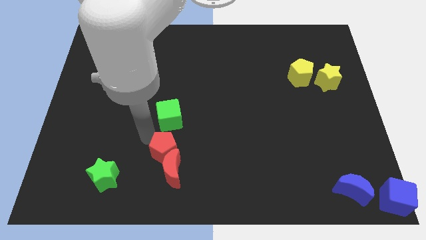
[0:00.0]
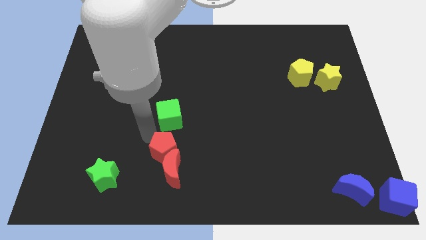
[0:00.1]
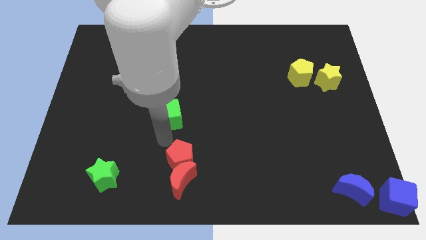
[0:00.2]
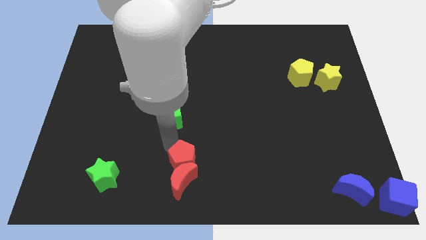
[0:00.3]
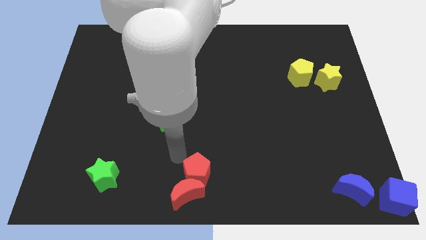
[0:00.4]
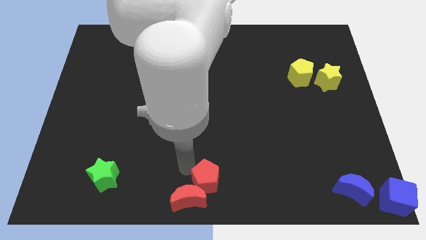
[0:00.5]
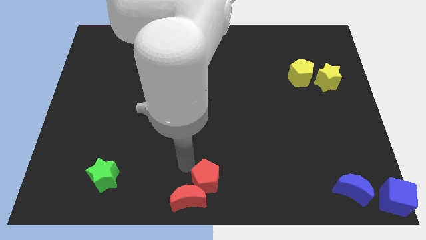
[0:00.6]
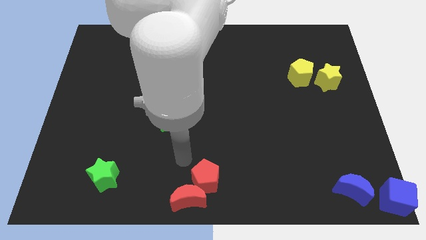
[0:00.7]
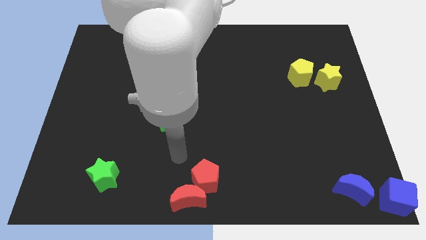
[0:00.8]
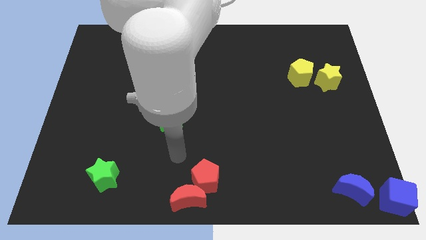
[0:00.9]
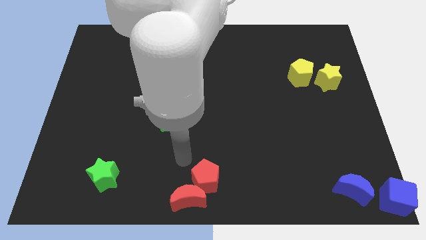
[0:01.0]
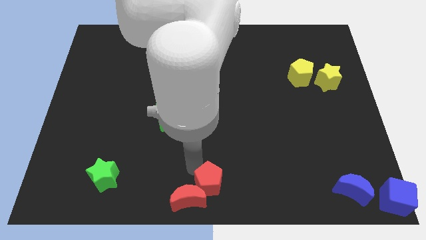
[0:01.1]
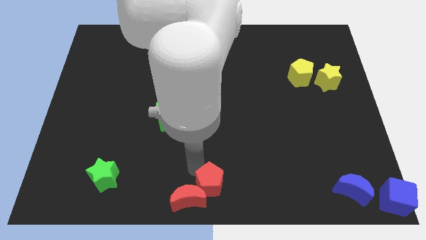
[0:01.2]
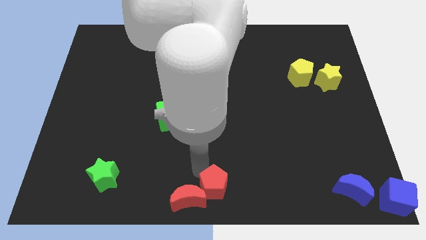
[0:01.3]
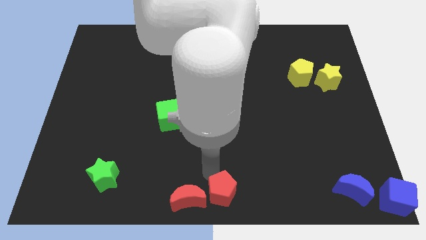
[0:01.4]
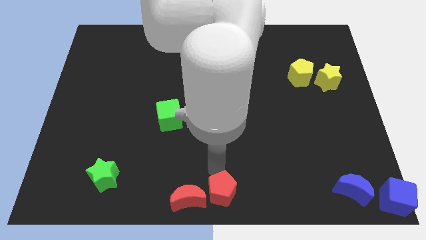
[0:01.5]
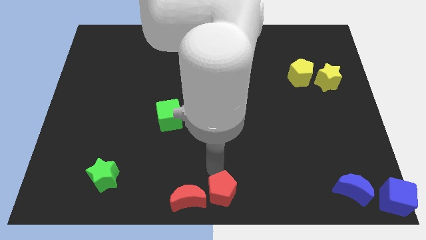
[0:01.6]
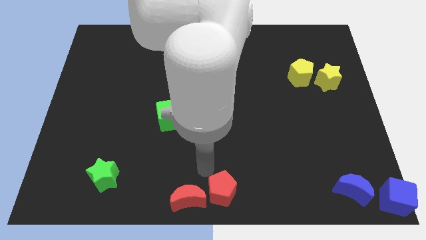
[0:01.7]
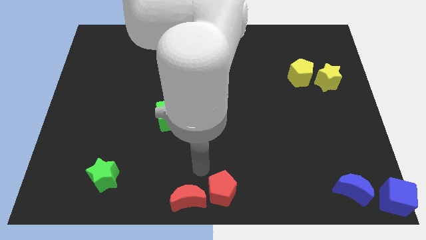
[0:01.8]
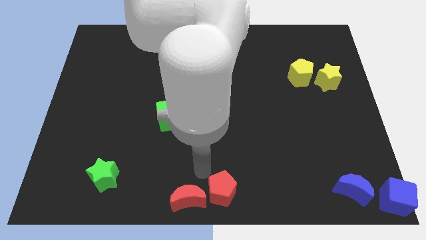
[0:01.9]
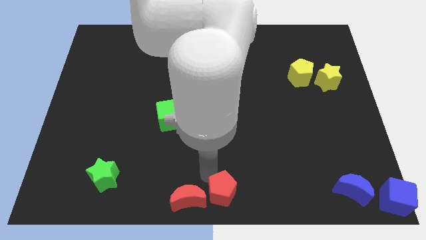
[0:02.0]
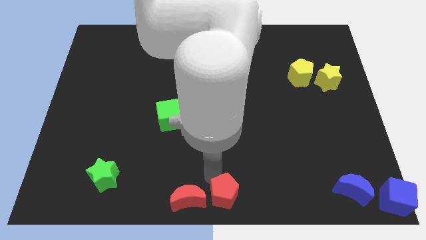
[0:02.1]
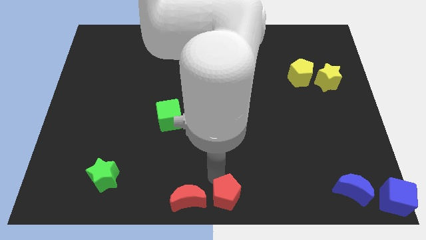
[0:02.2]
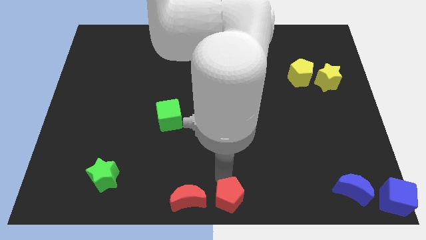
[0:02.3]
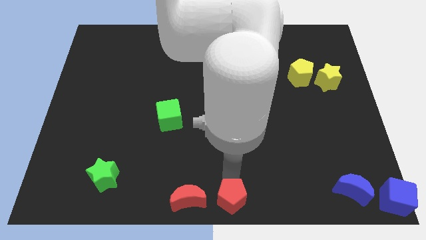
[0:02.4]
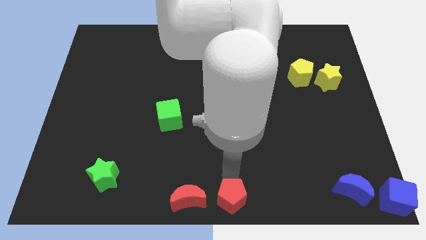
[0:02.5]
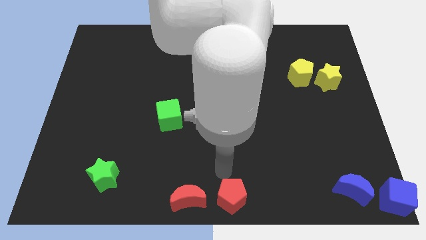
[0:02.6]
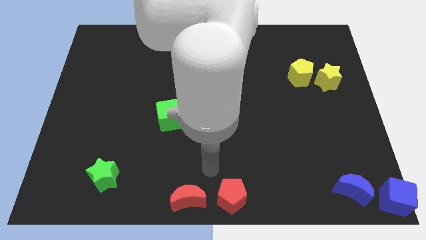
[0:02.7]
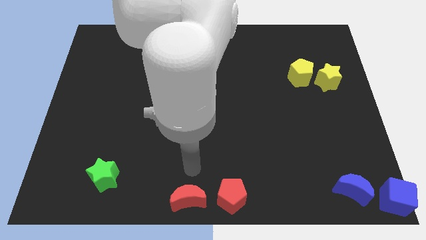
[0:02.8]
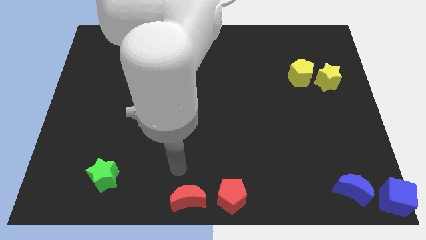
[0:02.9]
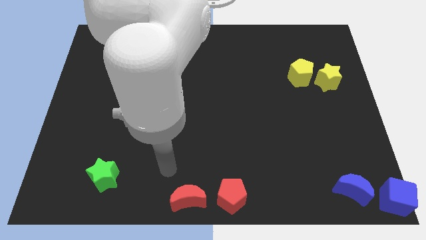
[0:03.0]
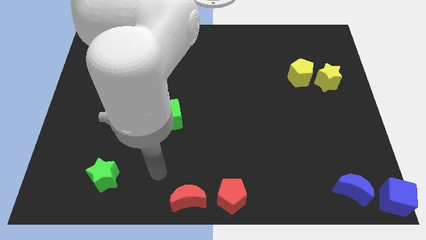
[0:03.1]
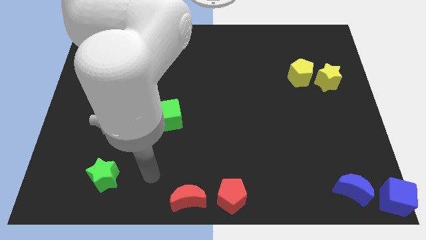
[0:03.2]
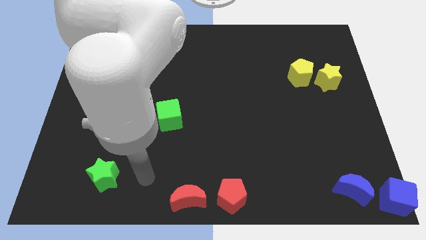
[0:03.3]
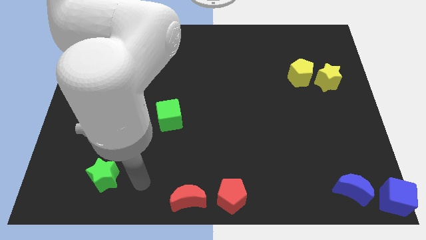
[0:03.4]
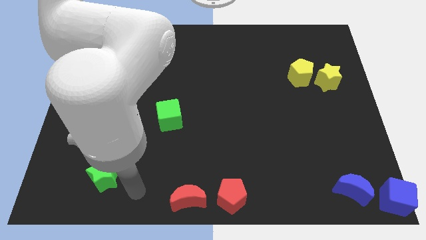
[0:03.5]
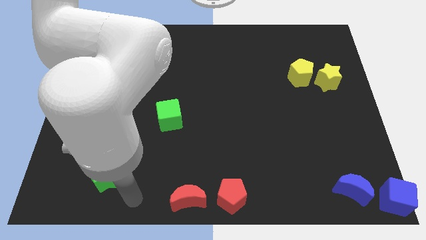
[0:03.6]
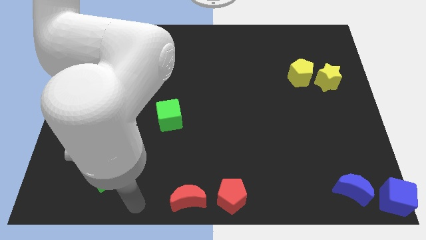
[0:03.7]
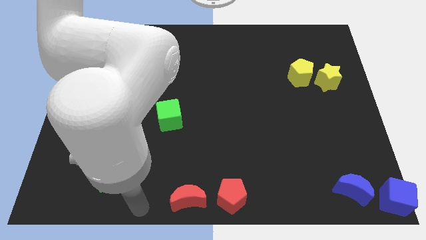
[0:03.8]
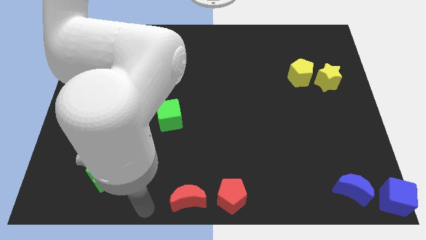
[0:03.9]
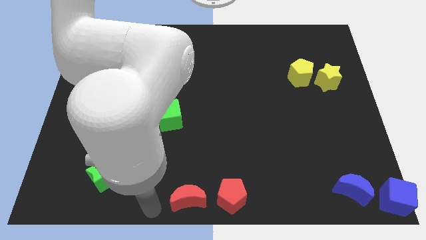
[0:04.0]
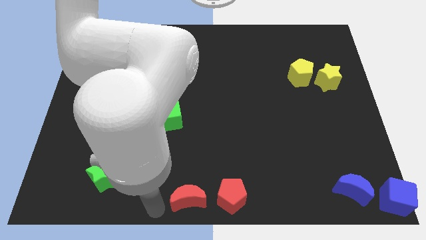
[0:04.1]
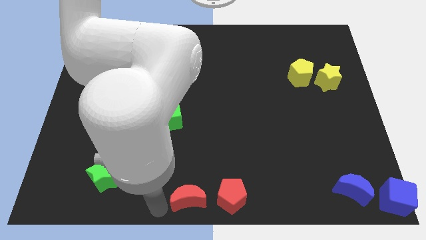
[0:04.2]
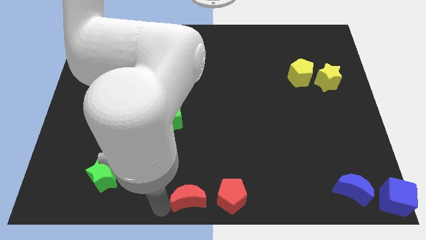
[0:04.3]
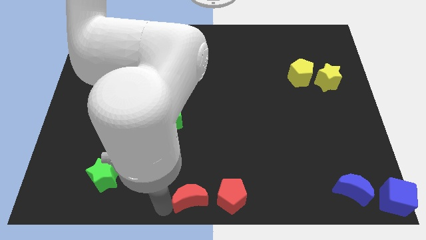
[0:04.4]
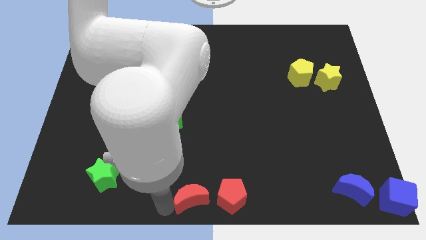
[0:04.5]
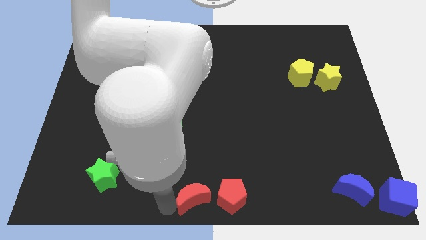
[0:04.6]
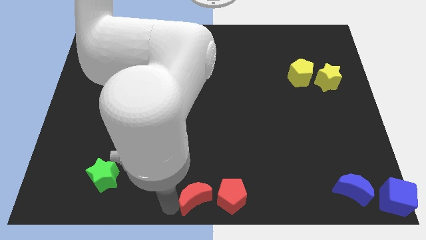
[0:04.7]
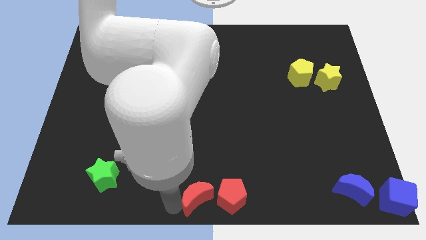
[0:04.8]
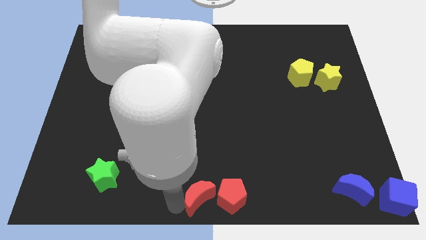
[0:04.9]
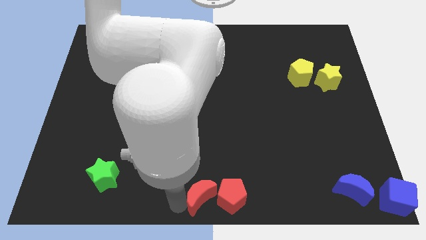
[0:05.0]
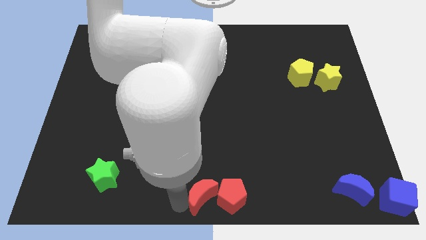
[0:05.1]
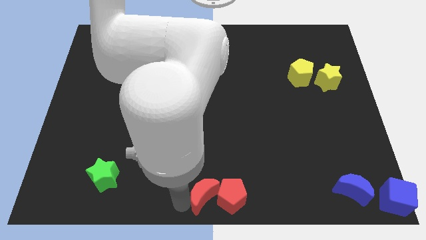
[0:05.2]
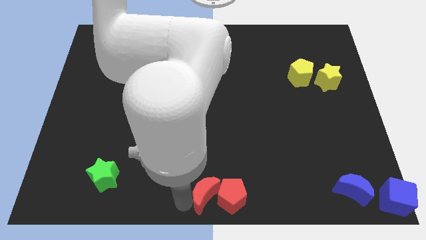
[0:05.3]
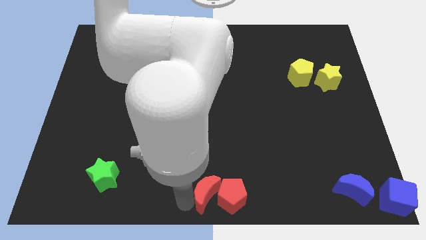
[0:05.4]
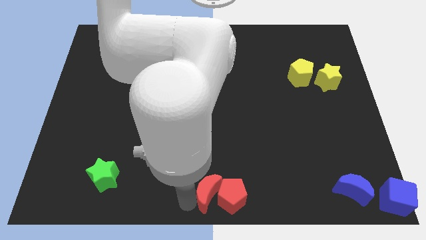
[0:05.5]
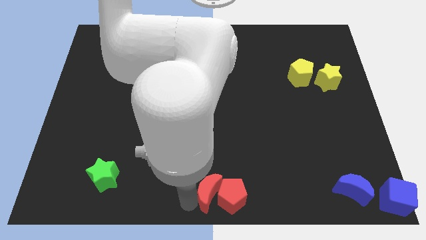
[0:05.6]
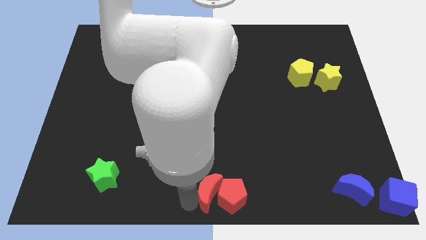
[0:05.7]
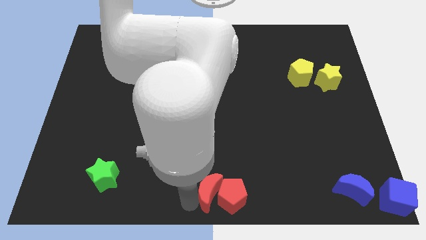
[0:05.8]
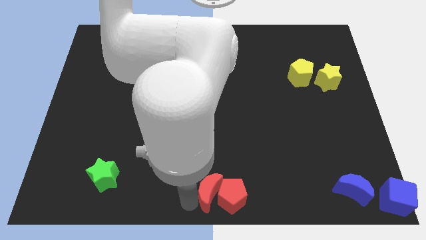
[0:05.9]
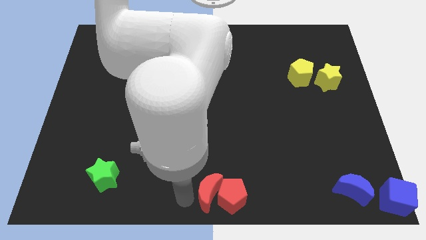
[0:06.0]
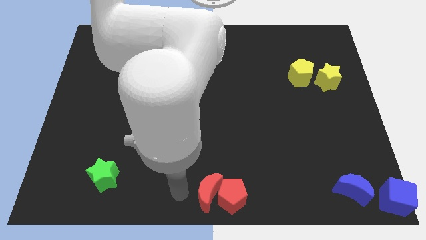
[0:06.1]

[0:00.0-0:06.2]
move red pentagon along with red crescent to the bottom centre of the board

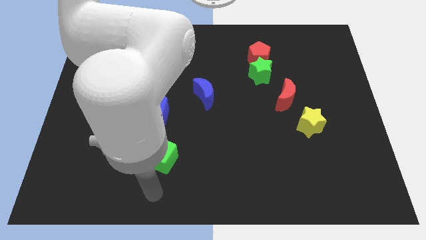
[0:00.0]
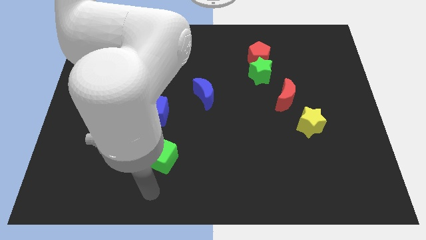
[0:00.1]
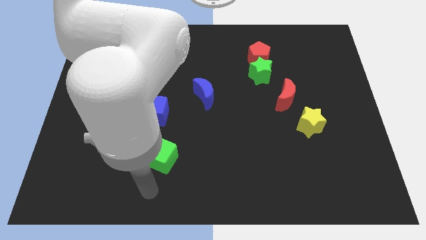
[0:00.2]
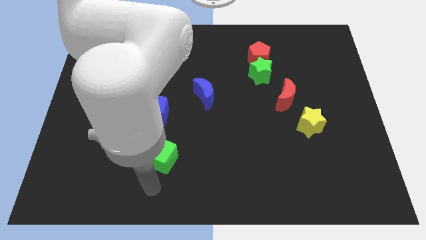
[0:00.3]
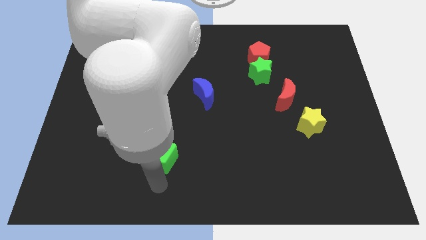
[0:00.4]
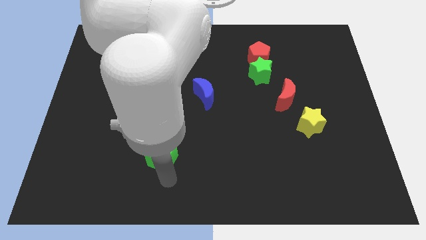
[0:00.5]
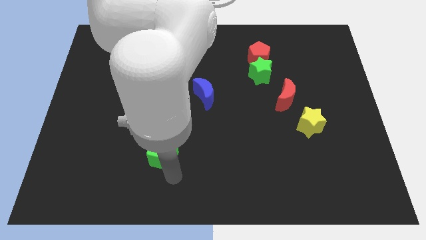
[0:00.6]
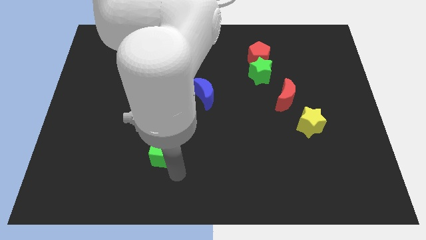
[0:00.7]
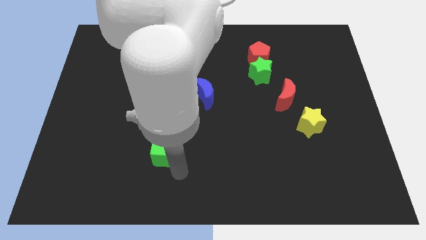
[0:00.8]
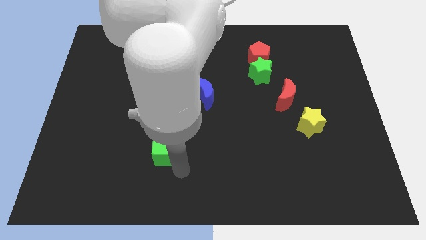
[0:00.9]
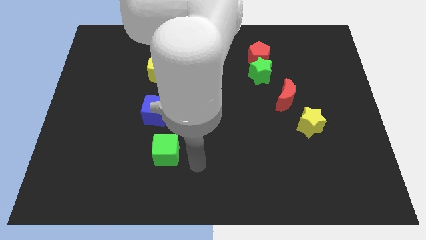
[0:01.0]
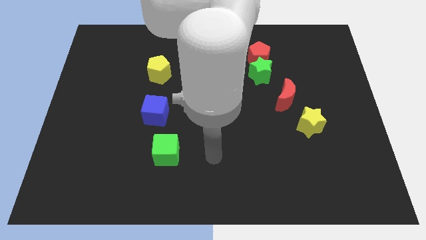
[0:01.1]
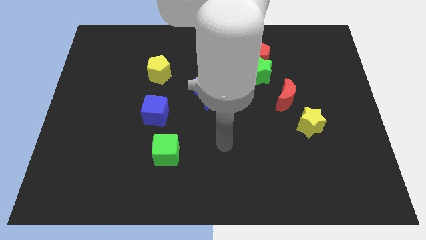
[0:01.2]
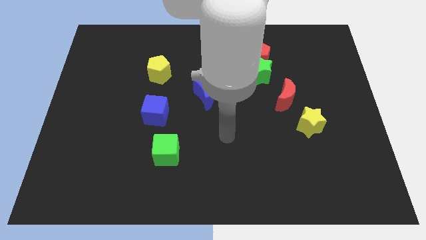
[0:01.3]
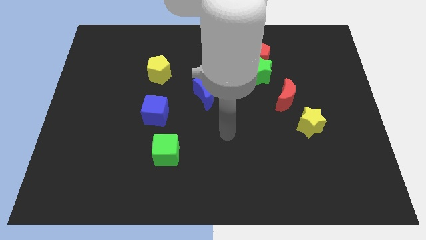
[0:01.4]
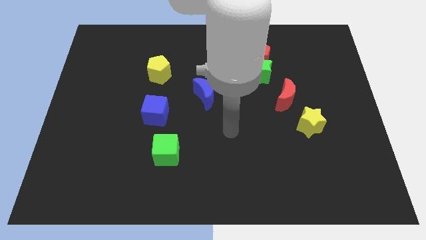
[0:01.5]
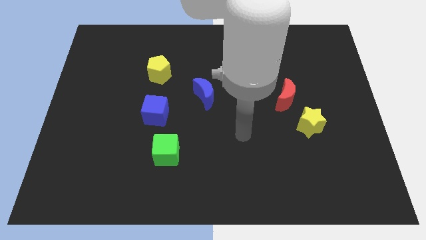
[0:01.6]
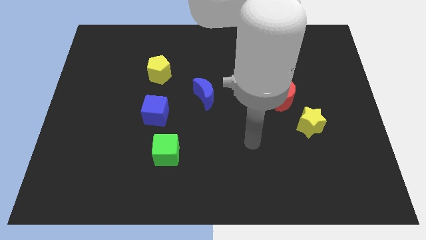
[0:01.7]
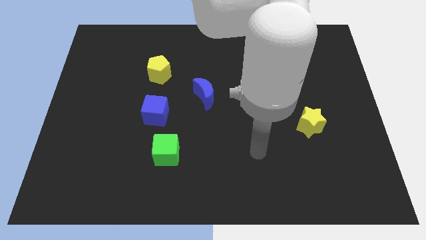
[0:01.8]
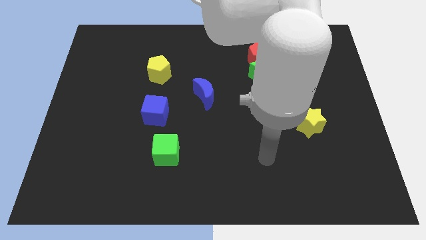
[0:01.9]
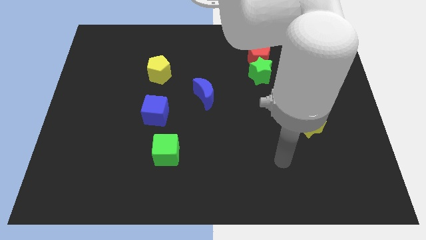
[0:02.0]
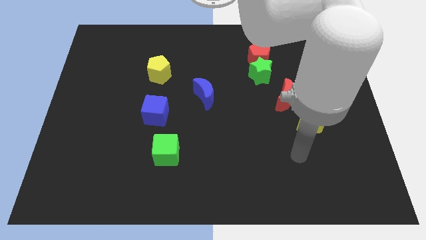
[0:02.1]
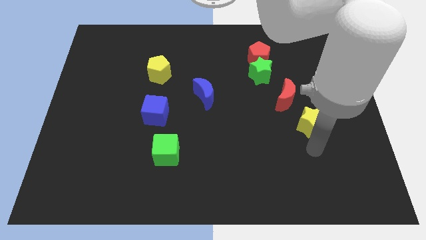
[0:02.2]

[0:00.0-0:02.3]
move your hand away from the green cube
